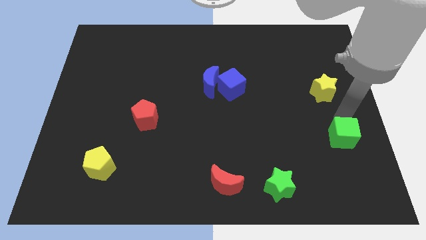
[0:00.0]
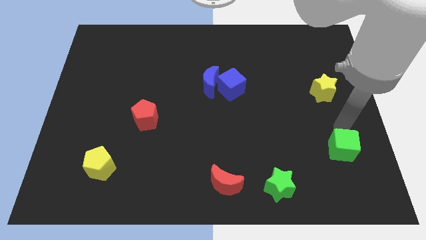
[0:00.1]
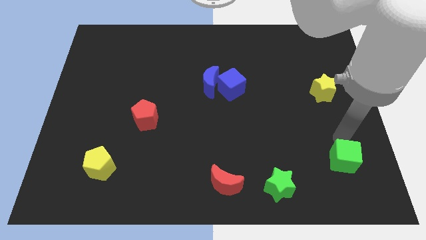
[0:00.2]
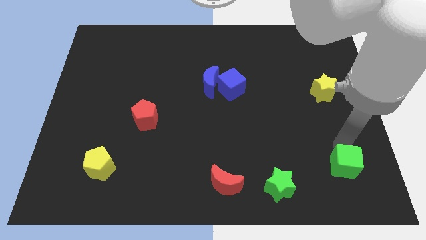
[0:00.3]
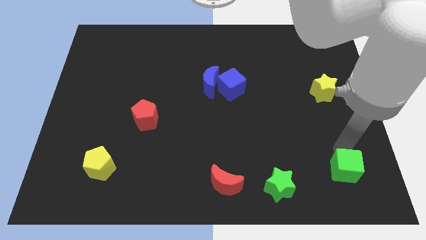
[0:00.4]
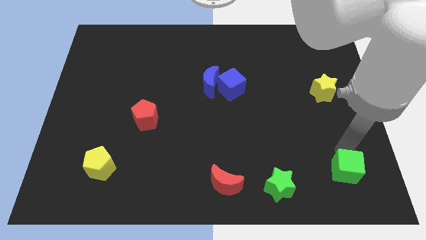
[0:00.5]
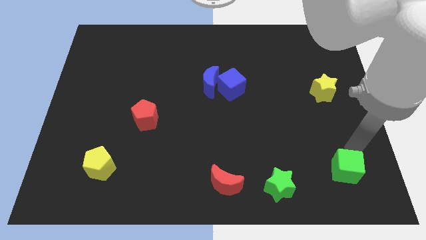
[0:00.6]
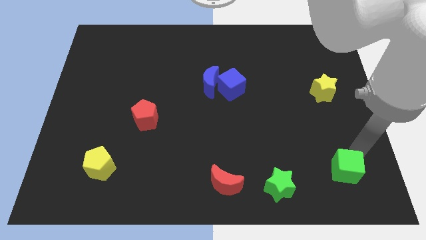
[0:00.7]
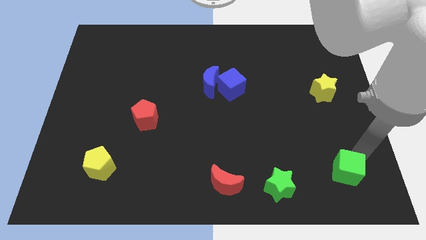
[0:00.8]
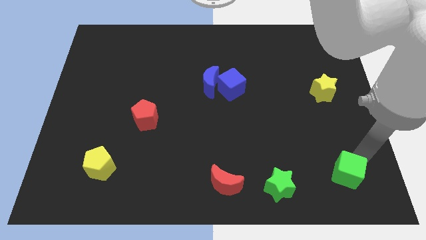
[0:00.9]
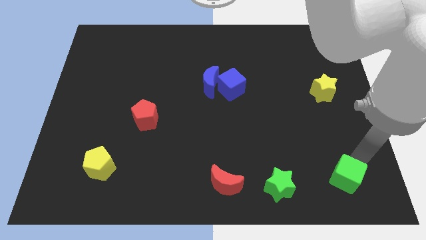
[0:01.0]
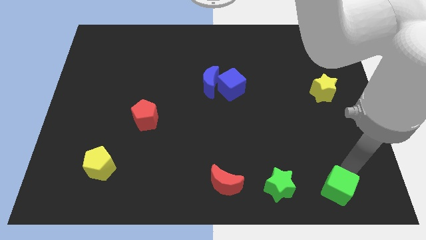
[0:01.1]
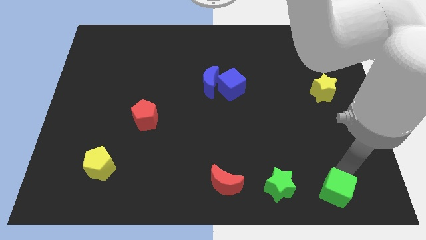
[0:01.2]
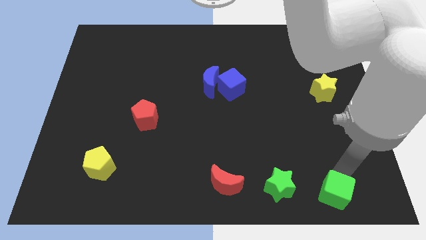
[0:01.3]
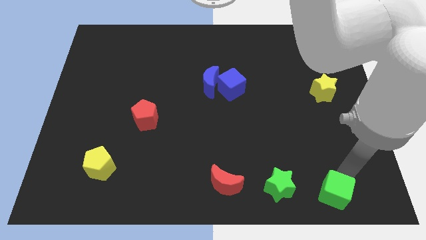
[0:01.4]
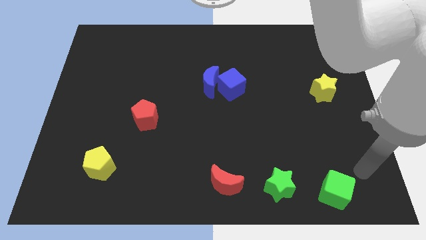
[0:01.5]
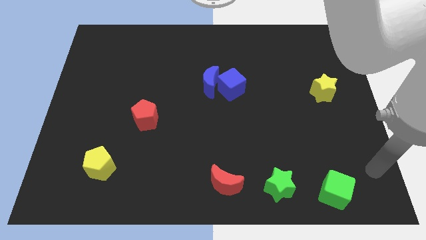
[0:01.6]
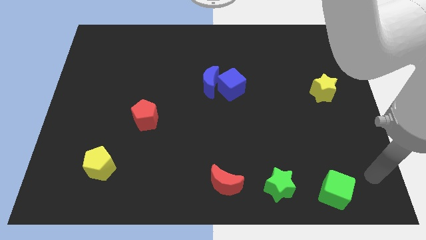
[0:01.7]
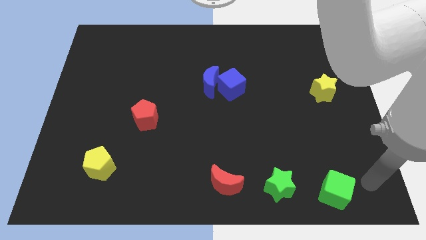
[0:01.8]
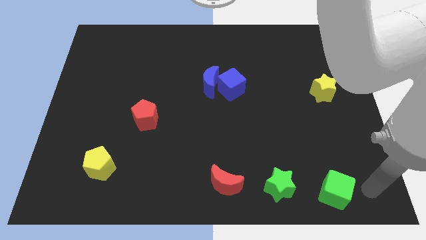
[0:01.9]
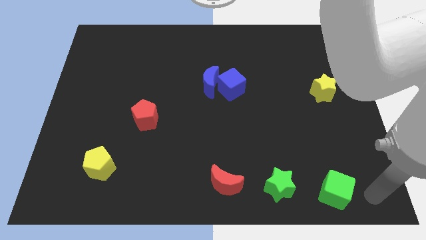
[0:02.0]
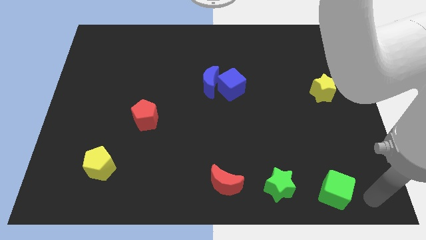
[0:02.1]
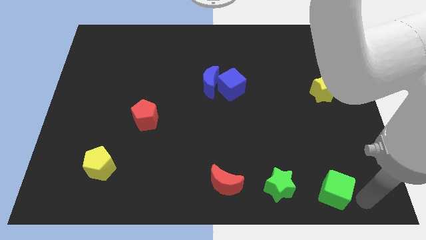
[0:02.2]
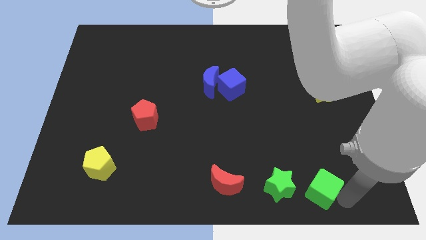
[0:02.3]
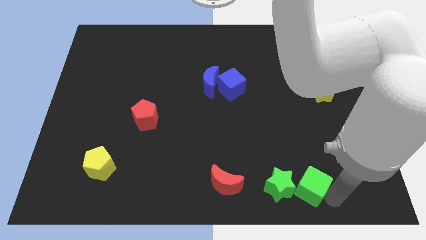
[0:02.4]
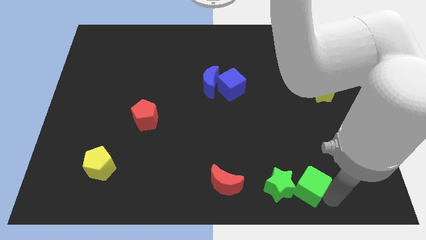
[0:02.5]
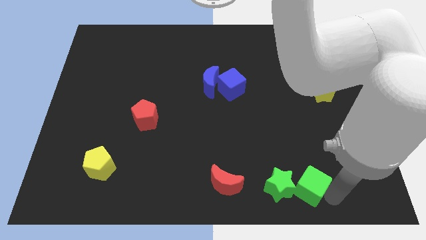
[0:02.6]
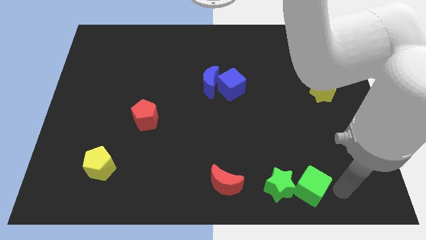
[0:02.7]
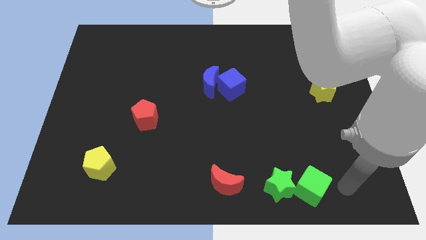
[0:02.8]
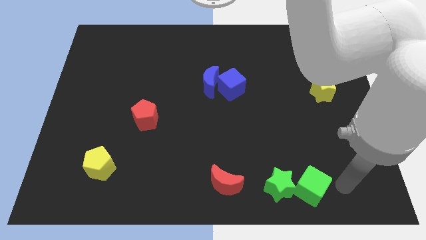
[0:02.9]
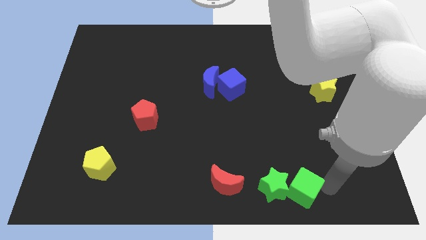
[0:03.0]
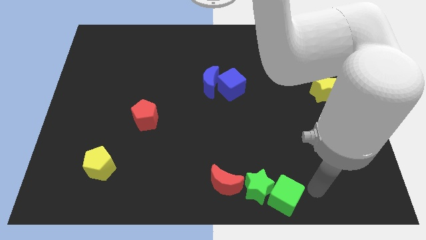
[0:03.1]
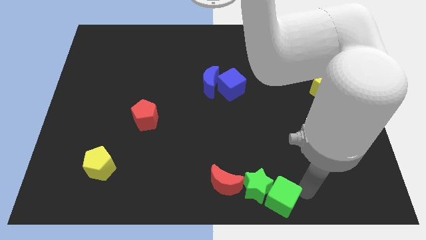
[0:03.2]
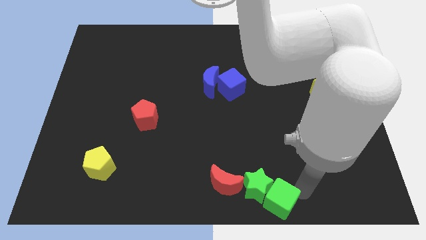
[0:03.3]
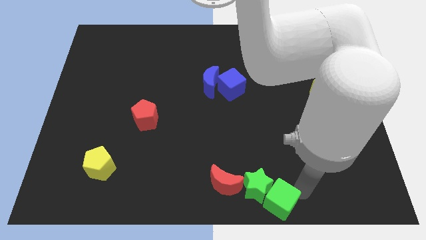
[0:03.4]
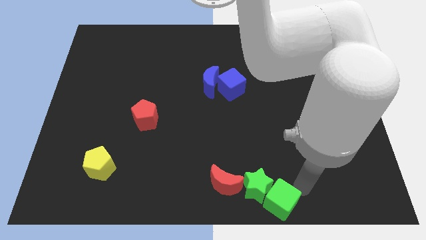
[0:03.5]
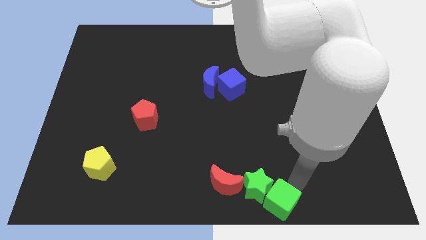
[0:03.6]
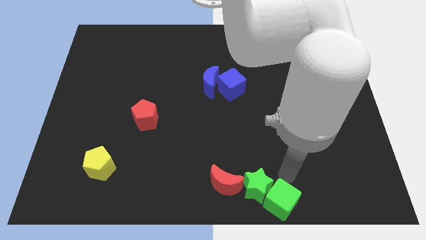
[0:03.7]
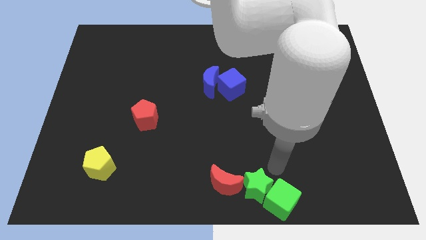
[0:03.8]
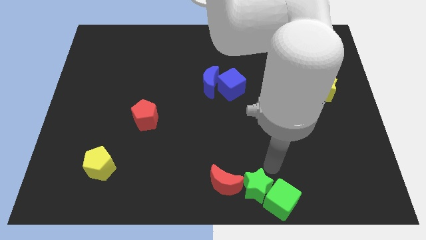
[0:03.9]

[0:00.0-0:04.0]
push the green cube into the green star

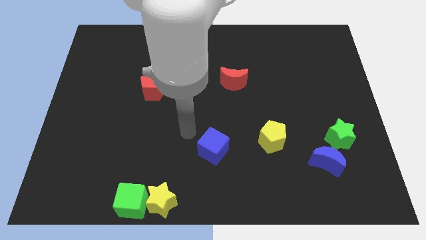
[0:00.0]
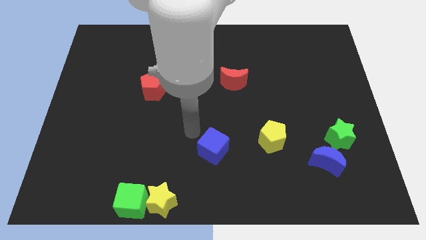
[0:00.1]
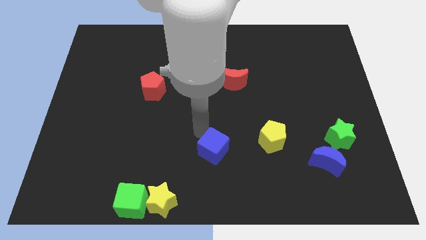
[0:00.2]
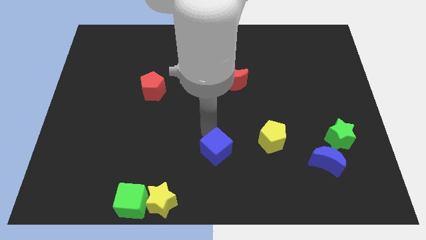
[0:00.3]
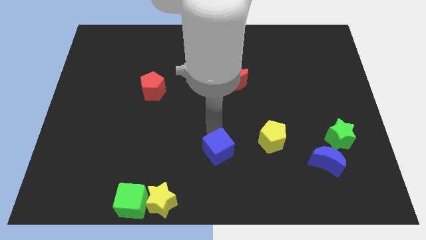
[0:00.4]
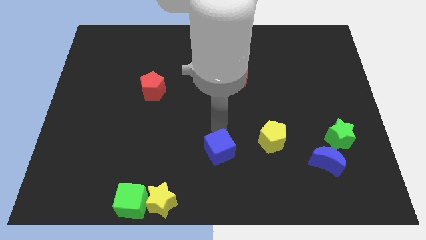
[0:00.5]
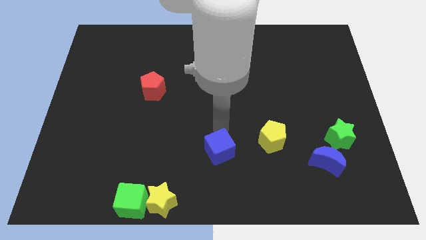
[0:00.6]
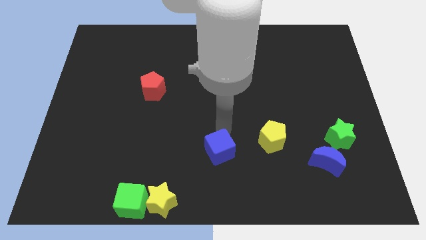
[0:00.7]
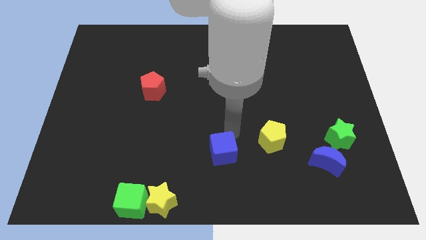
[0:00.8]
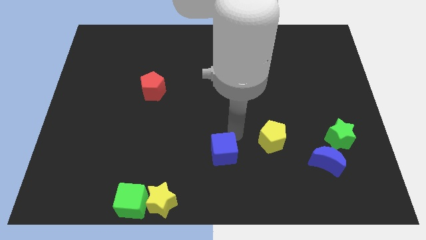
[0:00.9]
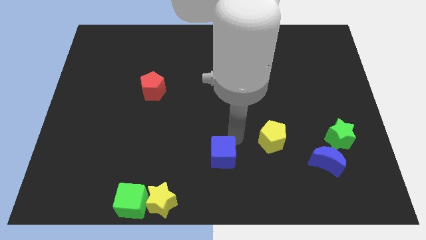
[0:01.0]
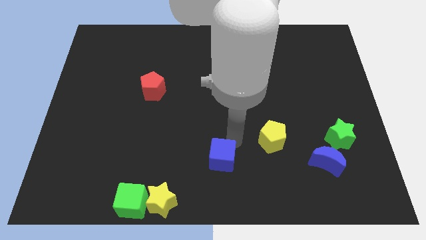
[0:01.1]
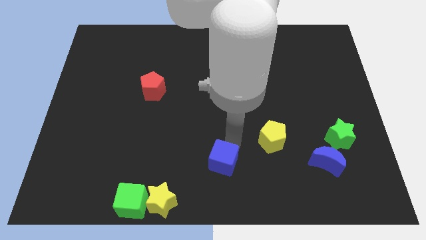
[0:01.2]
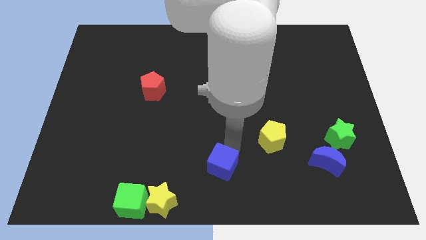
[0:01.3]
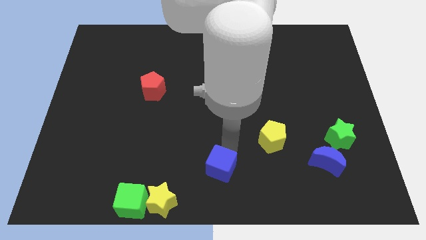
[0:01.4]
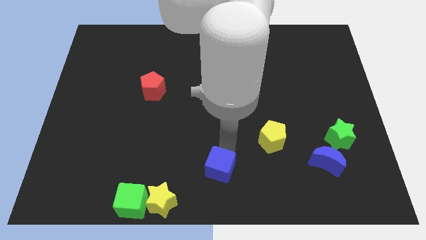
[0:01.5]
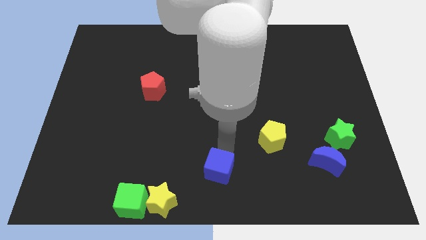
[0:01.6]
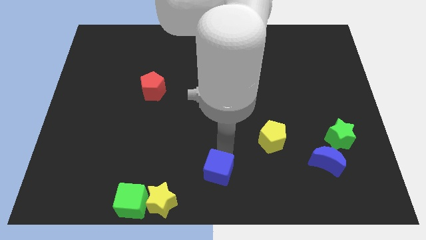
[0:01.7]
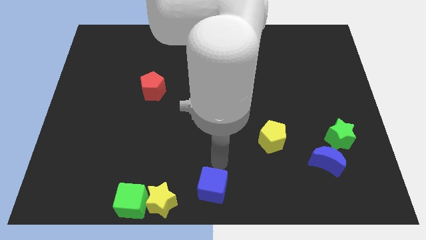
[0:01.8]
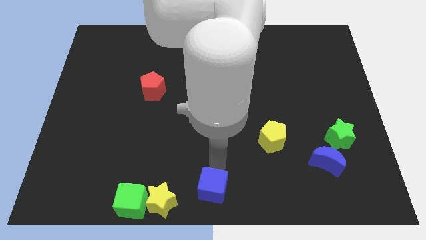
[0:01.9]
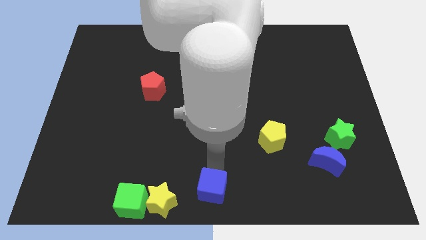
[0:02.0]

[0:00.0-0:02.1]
push the blue cube towards the bottom center

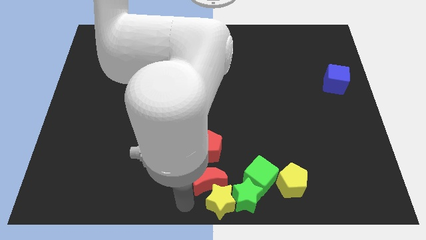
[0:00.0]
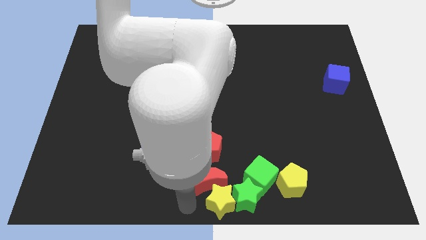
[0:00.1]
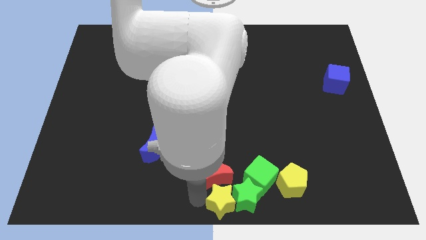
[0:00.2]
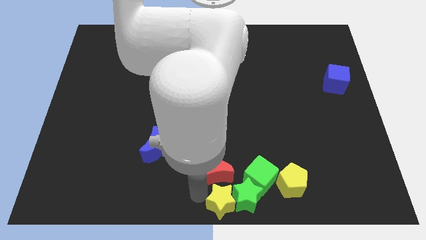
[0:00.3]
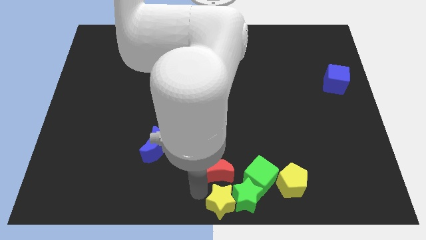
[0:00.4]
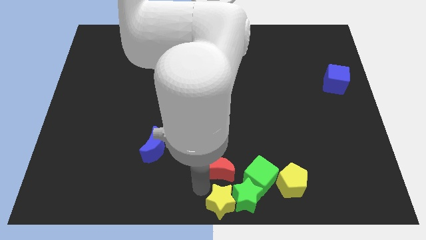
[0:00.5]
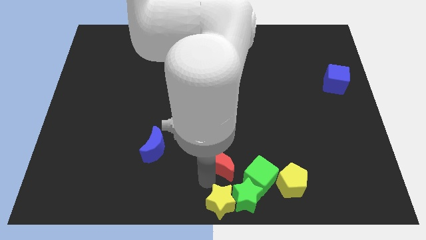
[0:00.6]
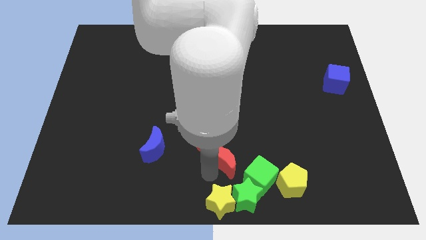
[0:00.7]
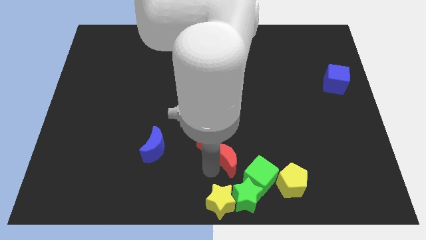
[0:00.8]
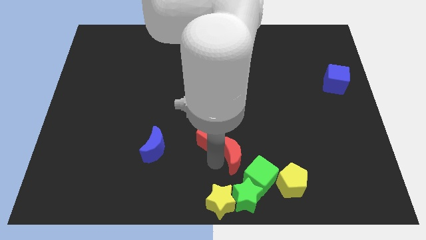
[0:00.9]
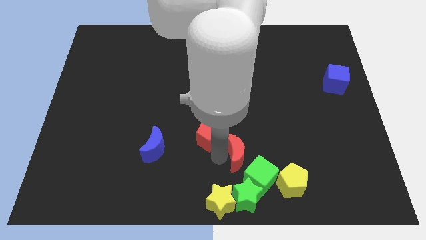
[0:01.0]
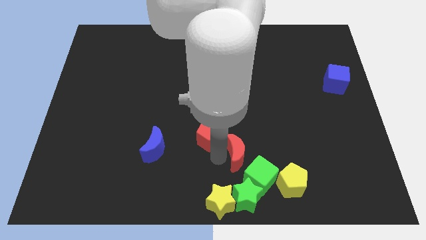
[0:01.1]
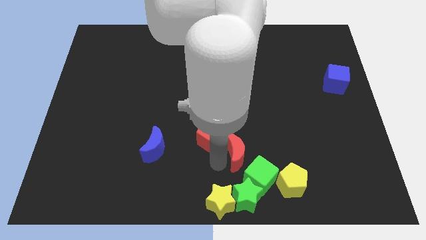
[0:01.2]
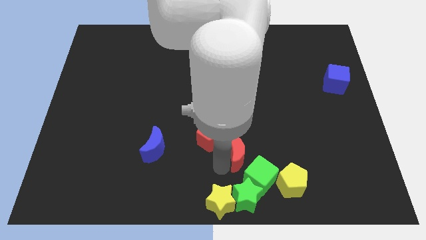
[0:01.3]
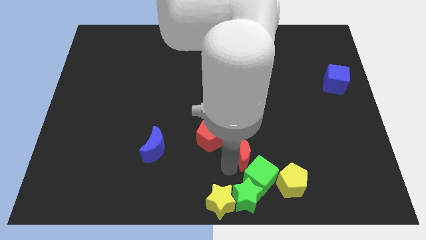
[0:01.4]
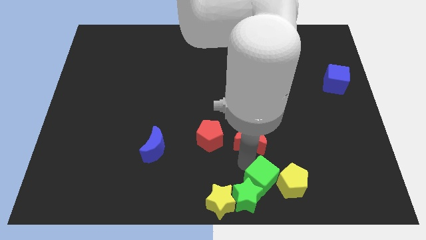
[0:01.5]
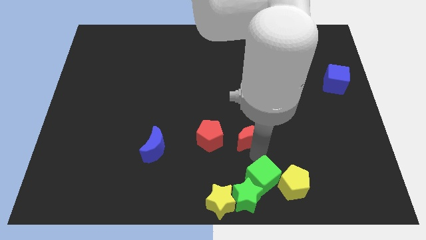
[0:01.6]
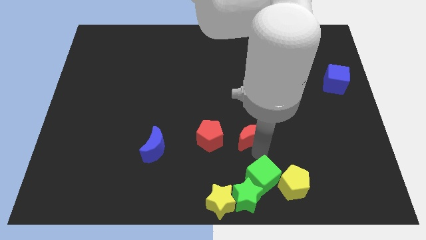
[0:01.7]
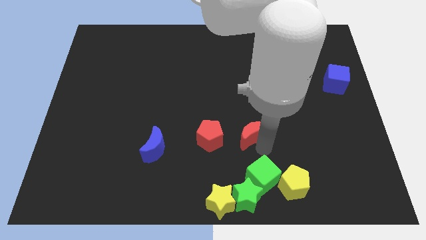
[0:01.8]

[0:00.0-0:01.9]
put the red moon right to the red pentagon

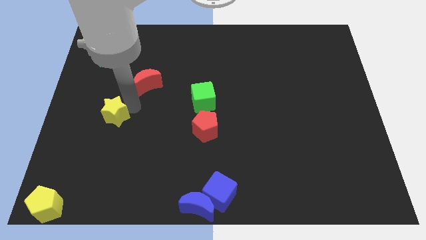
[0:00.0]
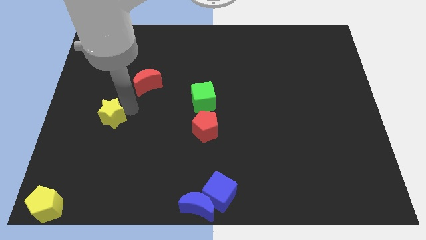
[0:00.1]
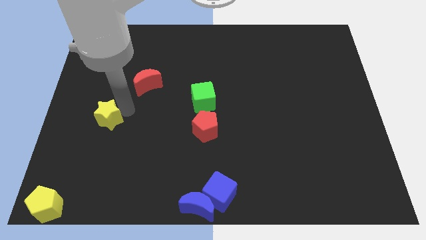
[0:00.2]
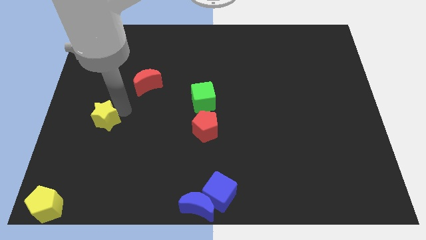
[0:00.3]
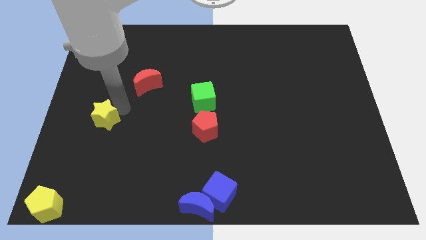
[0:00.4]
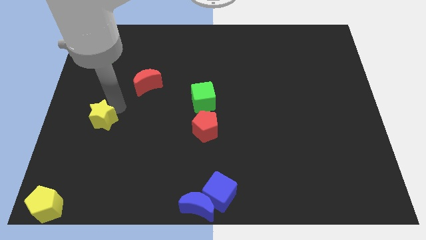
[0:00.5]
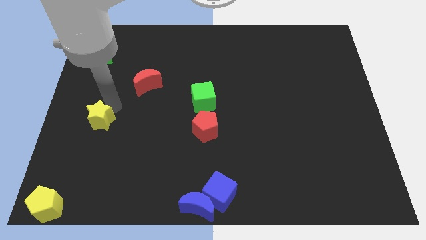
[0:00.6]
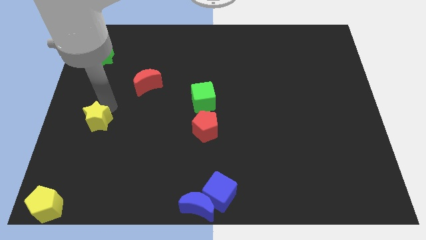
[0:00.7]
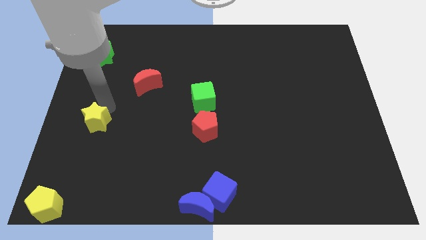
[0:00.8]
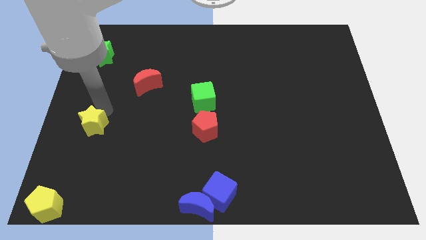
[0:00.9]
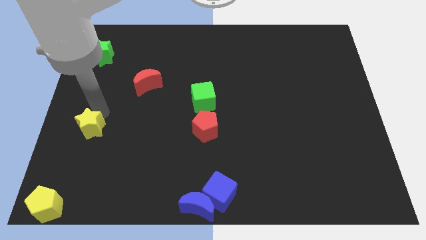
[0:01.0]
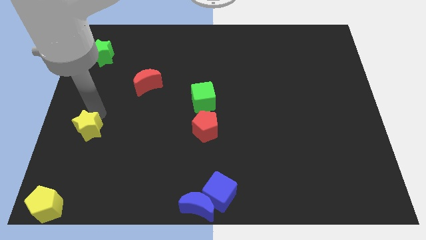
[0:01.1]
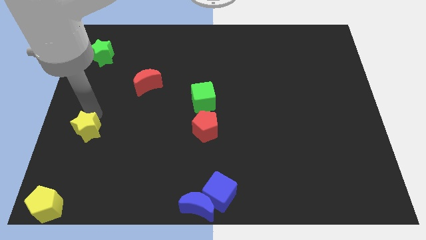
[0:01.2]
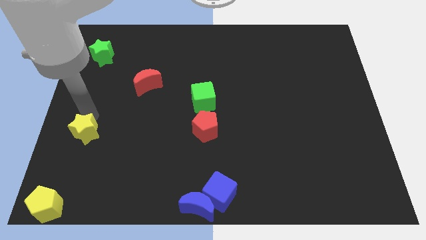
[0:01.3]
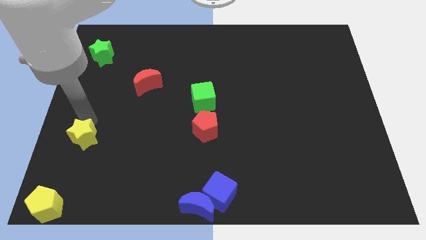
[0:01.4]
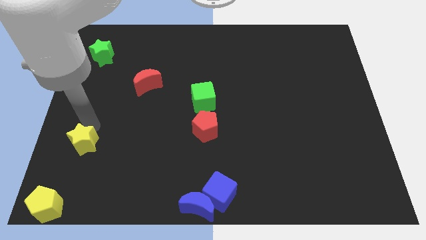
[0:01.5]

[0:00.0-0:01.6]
move the yellow star to the left side slightly
